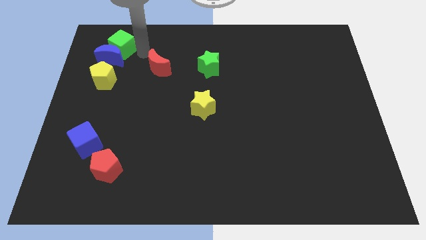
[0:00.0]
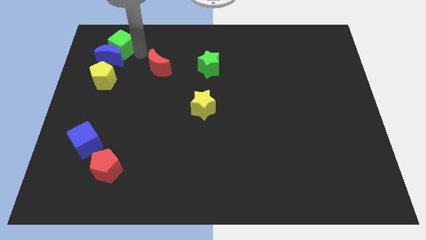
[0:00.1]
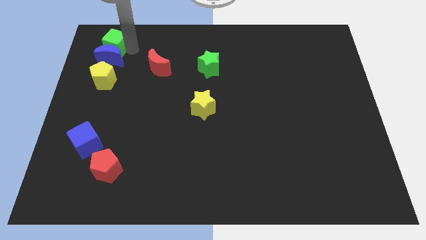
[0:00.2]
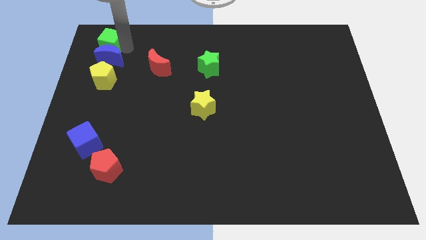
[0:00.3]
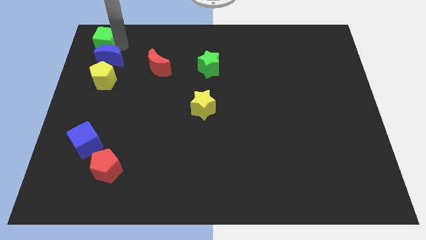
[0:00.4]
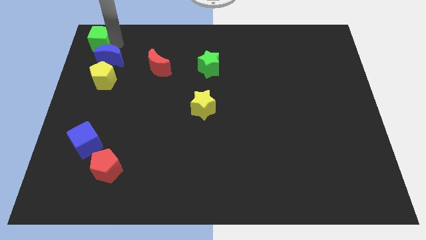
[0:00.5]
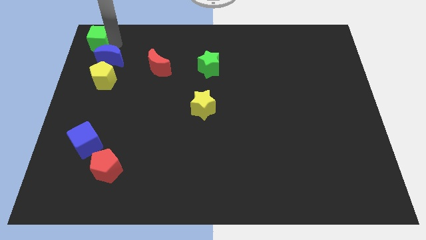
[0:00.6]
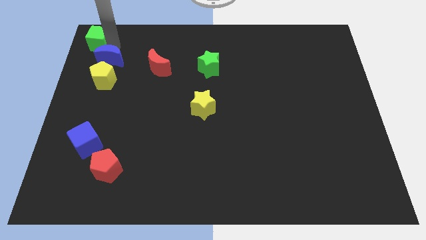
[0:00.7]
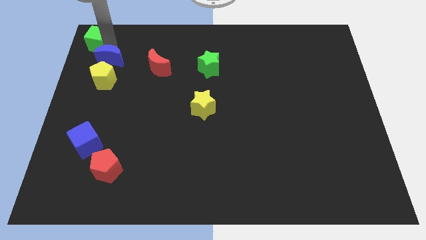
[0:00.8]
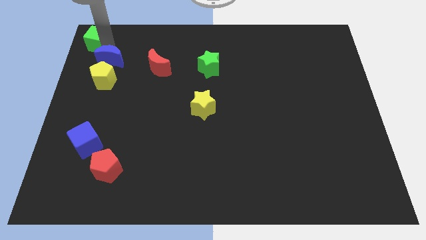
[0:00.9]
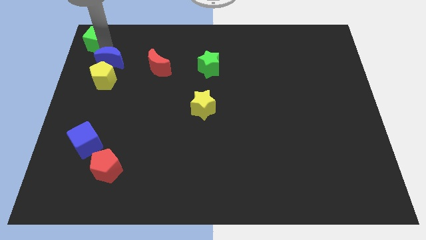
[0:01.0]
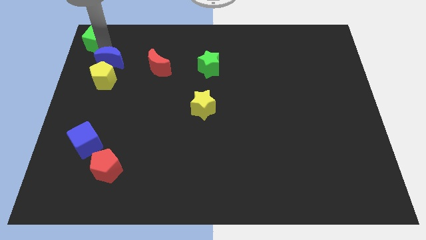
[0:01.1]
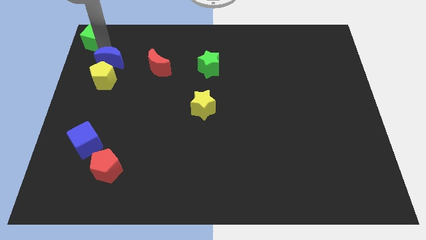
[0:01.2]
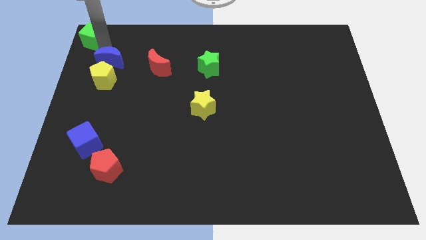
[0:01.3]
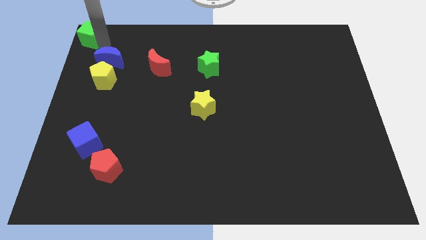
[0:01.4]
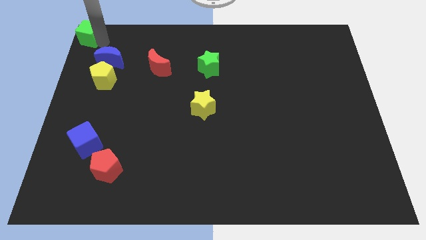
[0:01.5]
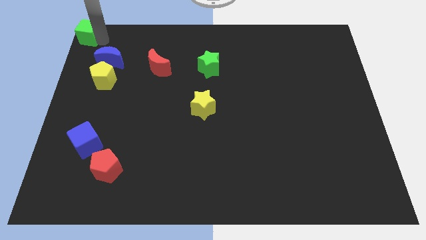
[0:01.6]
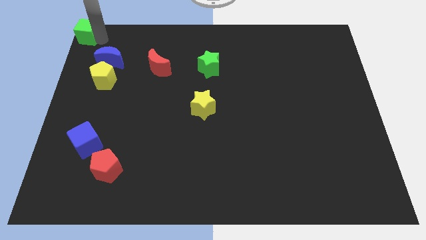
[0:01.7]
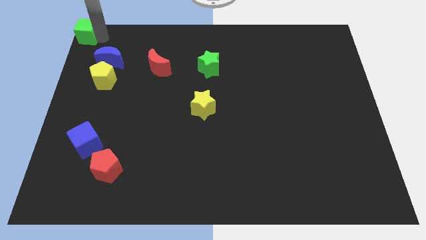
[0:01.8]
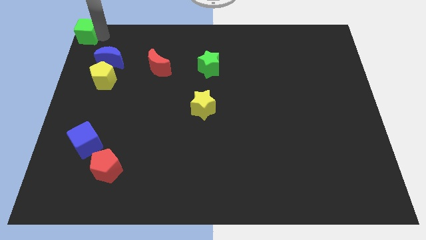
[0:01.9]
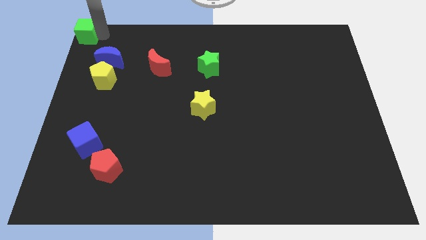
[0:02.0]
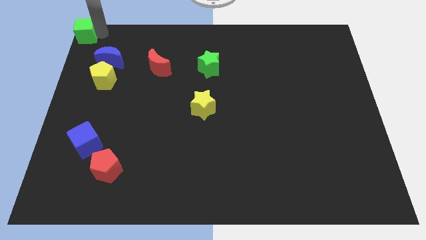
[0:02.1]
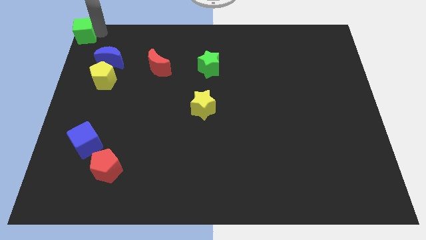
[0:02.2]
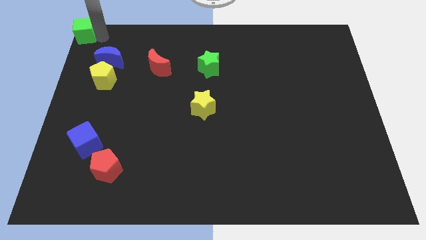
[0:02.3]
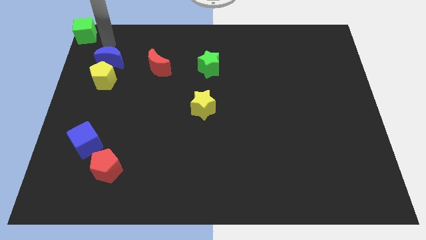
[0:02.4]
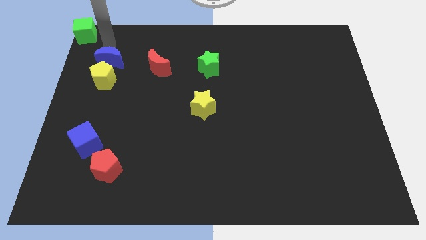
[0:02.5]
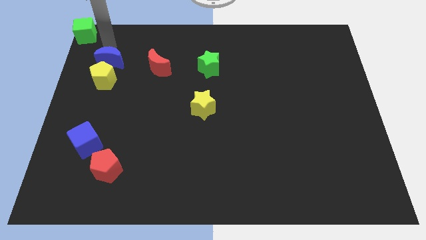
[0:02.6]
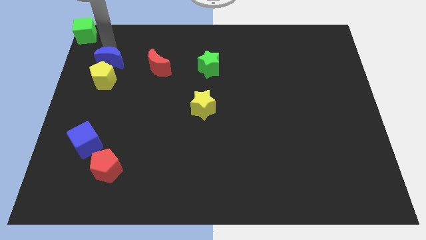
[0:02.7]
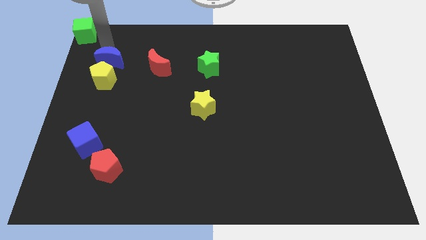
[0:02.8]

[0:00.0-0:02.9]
push the green cube to the top left corner

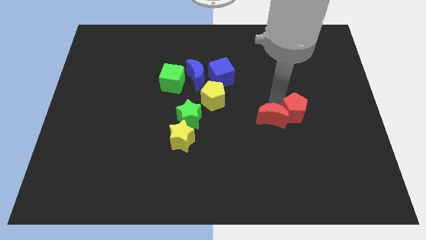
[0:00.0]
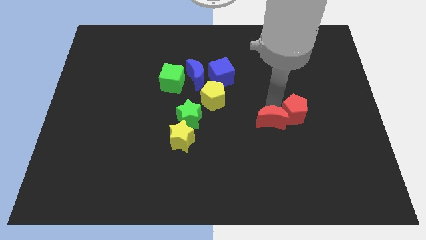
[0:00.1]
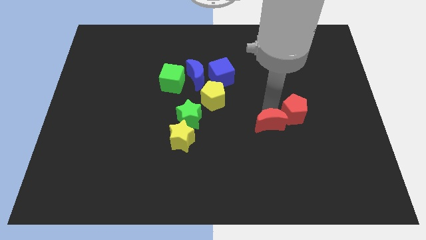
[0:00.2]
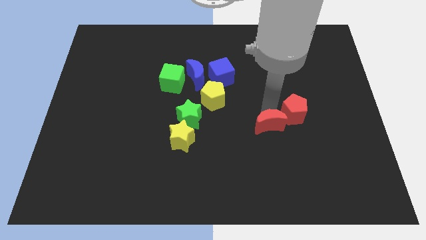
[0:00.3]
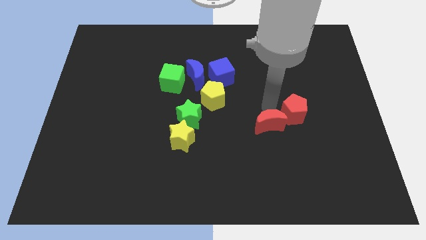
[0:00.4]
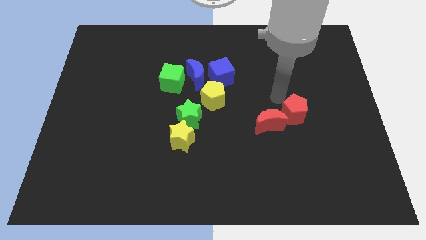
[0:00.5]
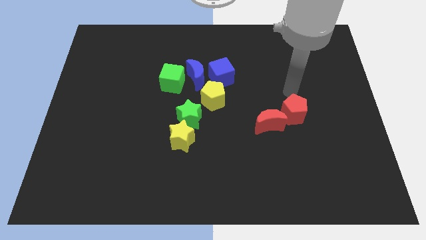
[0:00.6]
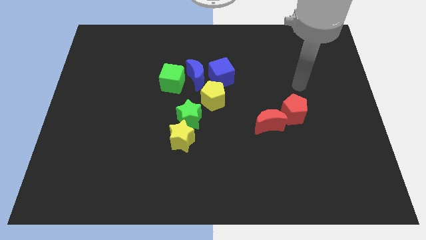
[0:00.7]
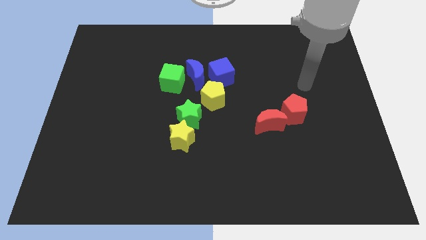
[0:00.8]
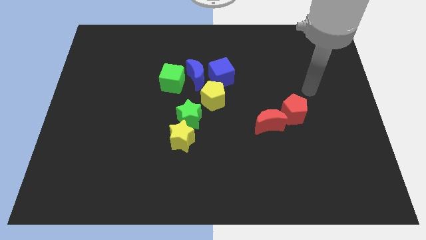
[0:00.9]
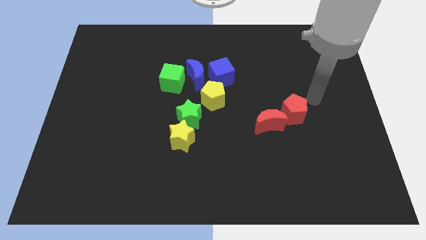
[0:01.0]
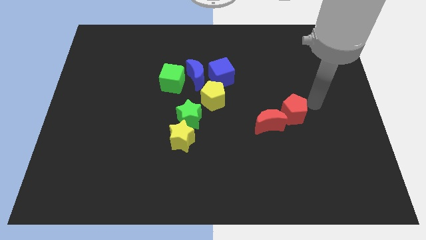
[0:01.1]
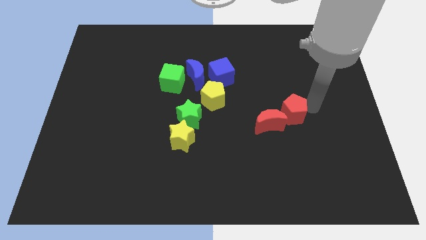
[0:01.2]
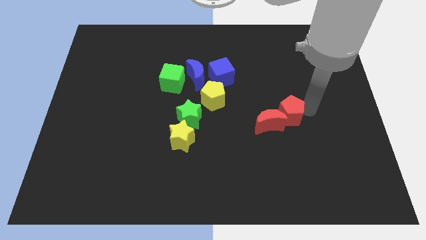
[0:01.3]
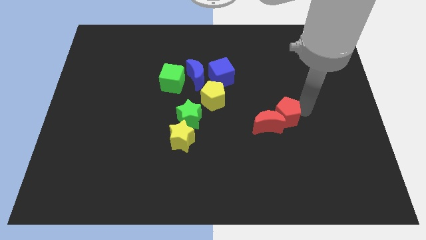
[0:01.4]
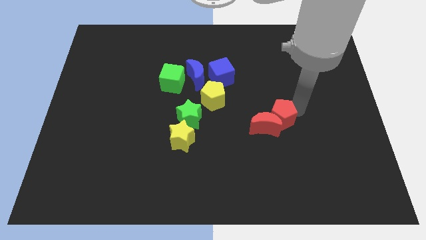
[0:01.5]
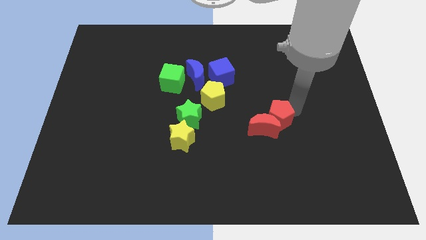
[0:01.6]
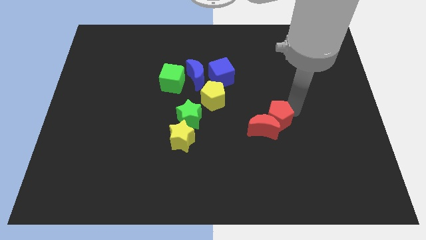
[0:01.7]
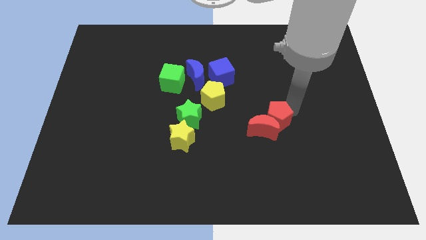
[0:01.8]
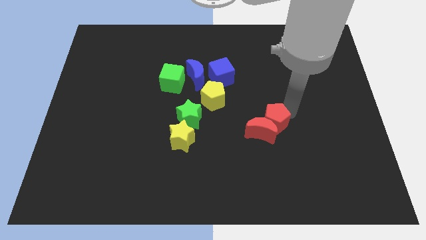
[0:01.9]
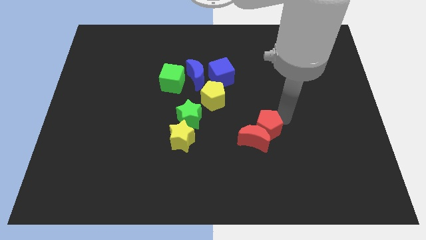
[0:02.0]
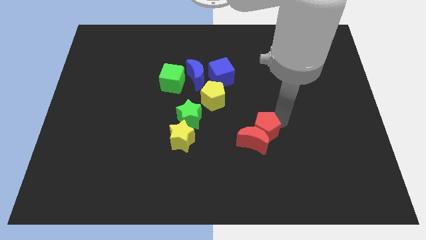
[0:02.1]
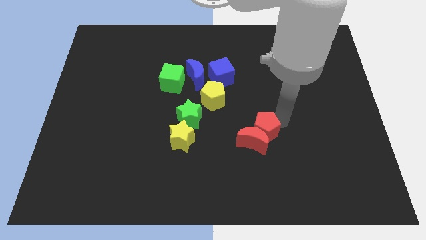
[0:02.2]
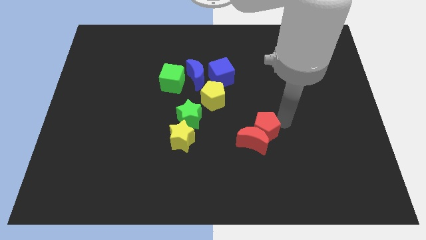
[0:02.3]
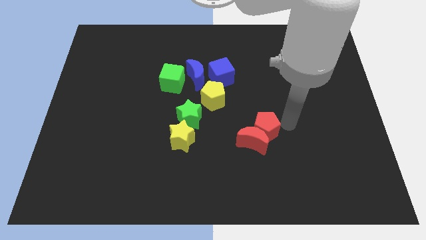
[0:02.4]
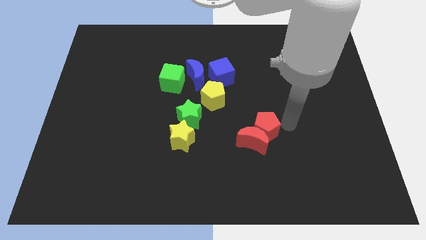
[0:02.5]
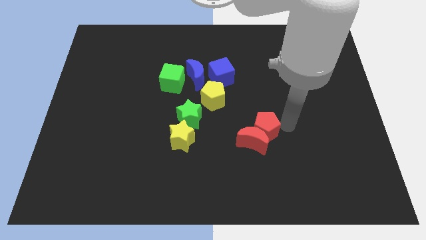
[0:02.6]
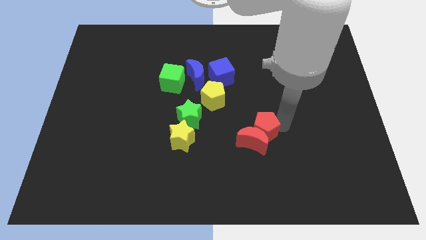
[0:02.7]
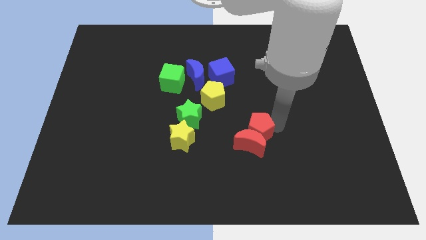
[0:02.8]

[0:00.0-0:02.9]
push the group of red blocks to the right side of the yellow star

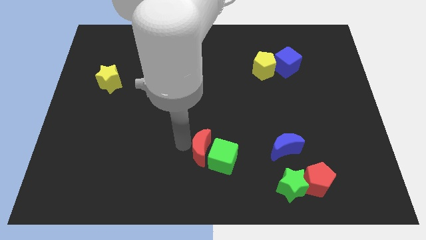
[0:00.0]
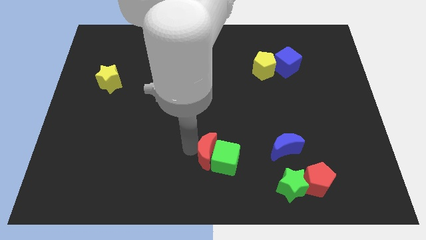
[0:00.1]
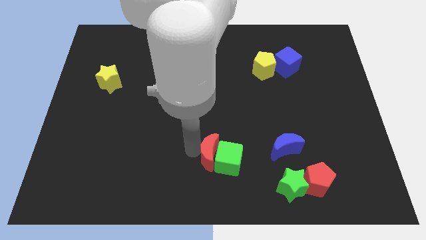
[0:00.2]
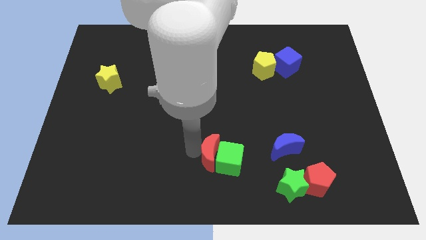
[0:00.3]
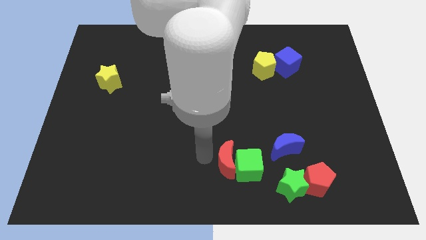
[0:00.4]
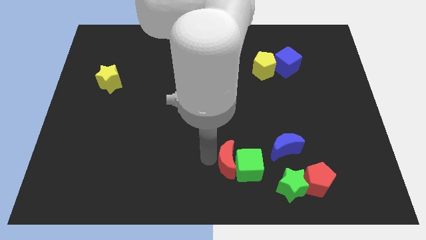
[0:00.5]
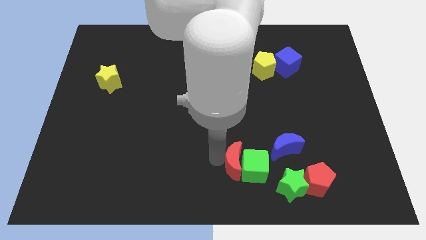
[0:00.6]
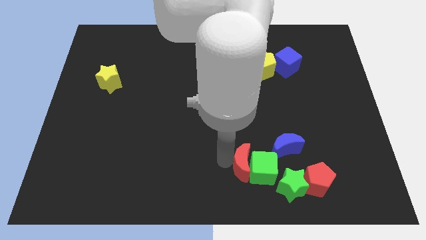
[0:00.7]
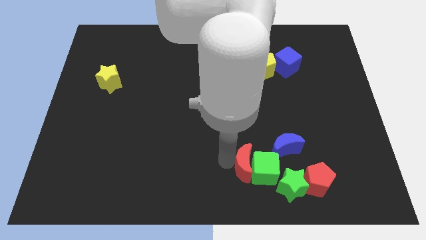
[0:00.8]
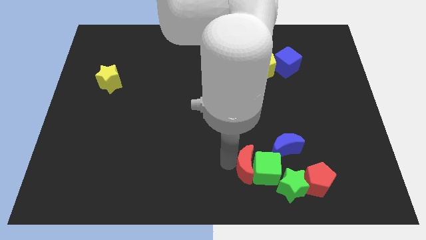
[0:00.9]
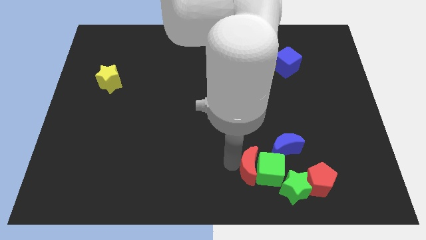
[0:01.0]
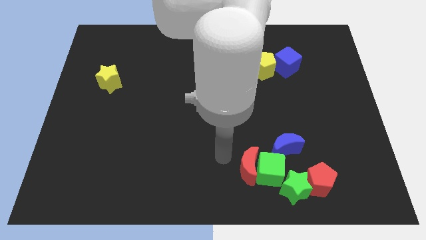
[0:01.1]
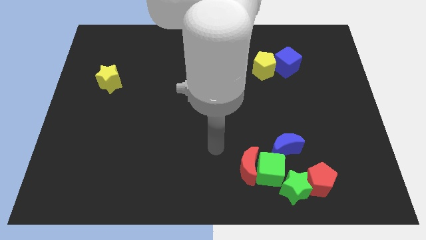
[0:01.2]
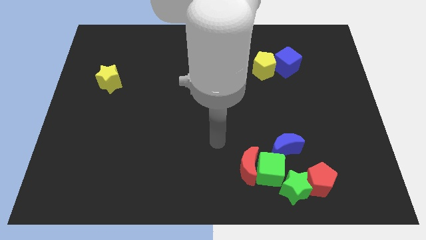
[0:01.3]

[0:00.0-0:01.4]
push the red crescent along with the green cube into the group of blocks

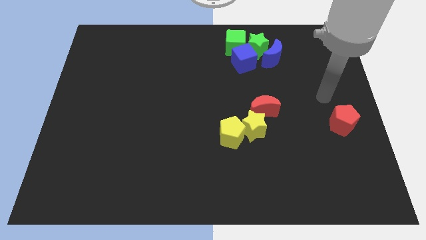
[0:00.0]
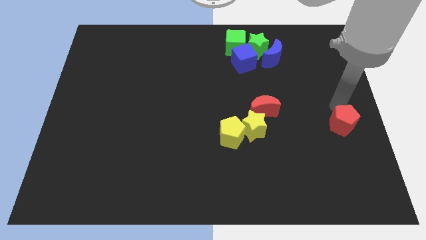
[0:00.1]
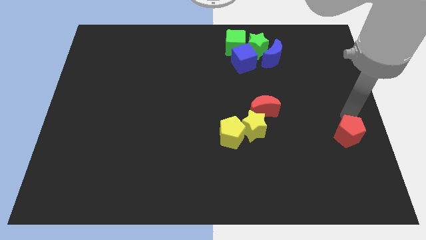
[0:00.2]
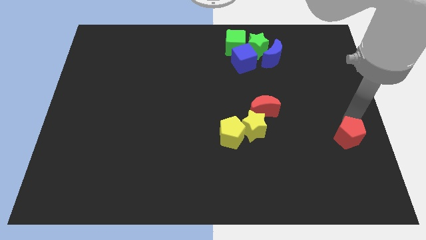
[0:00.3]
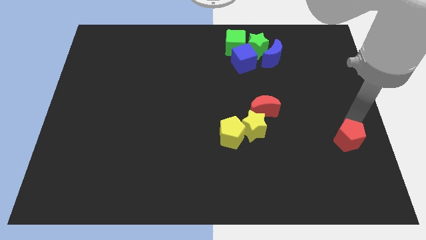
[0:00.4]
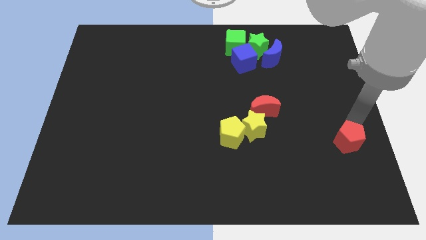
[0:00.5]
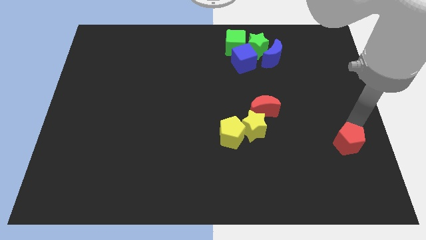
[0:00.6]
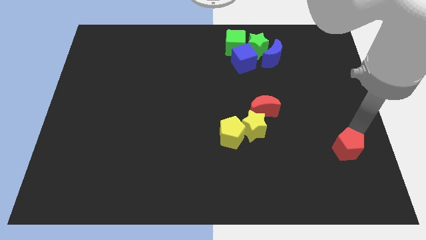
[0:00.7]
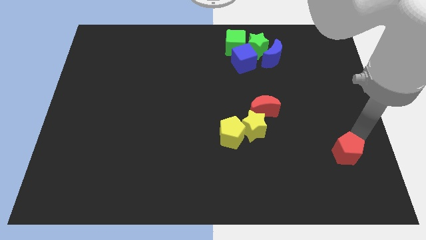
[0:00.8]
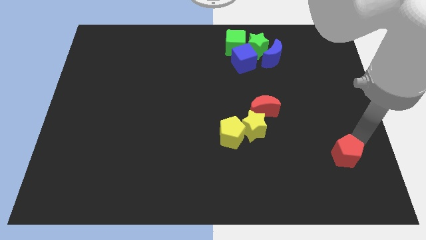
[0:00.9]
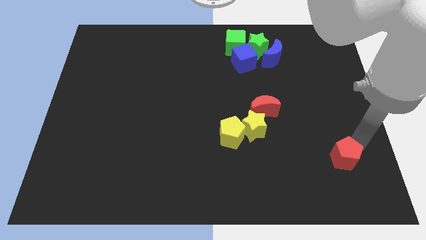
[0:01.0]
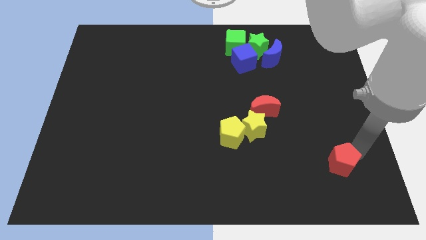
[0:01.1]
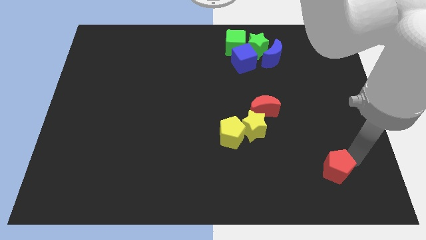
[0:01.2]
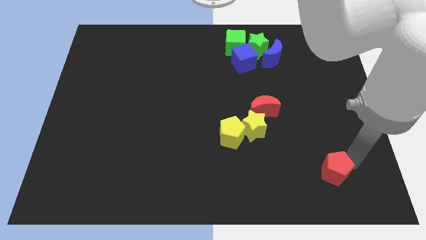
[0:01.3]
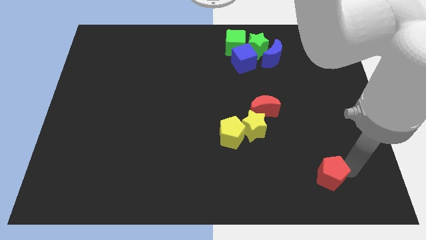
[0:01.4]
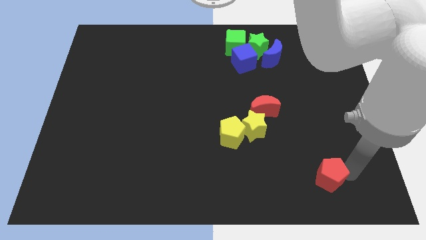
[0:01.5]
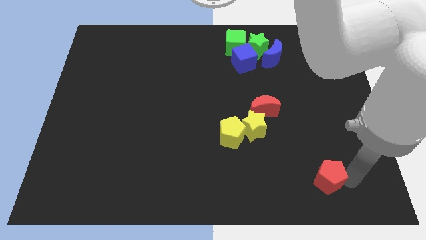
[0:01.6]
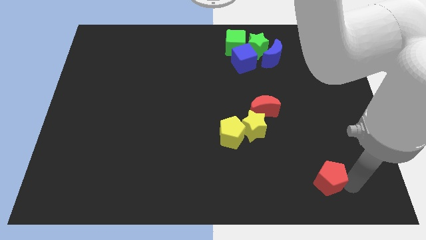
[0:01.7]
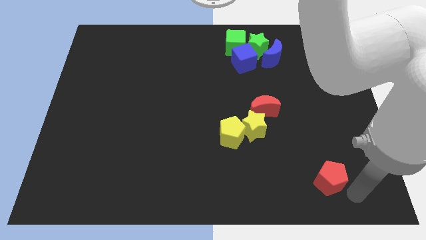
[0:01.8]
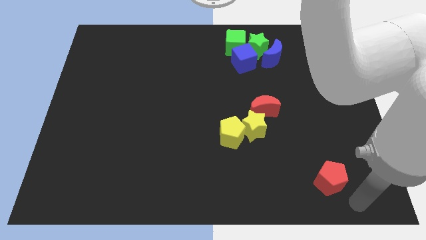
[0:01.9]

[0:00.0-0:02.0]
push the red pentagon slightly towards bottom right
